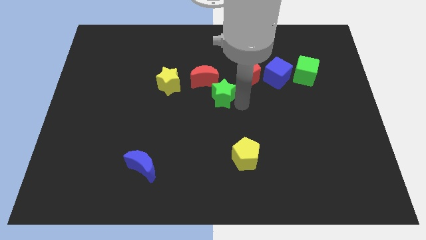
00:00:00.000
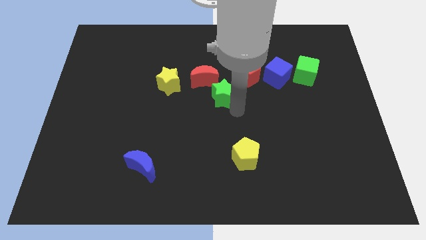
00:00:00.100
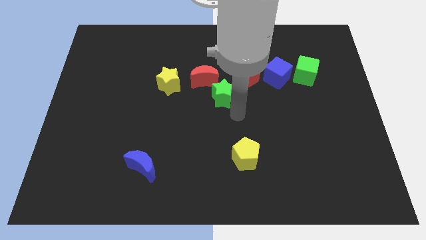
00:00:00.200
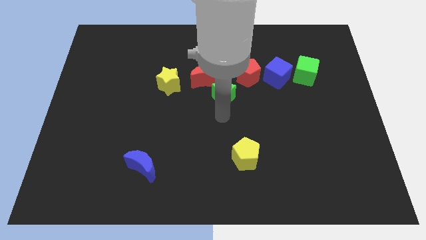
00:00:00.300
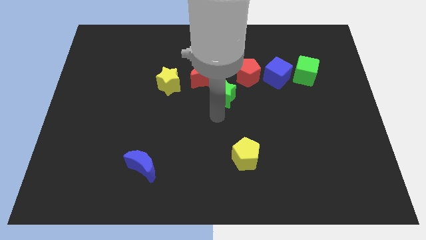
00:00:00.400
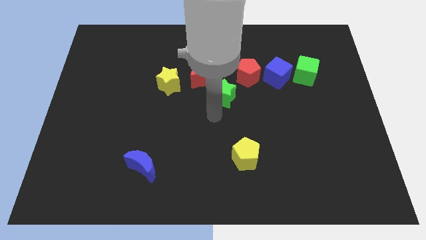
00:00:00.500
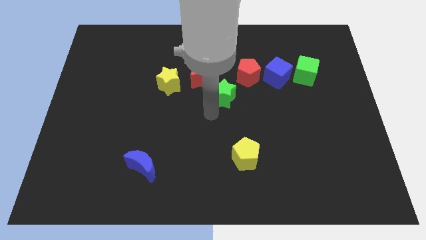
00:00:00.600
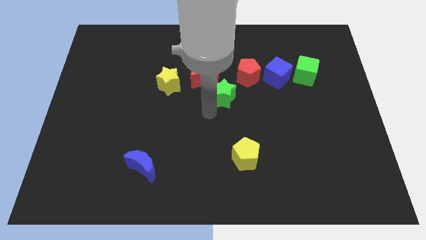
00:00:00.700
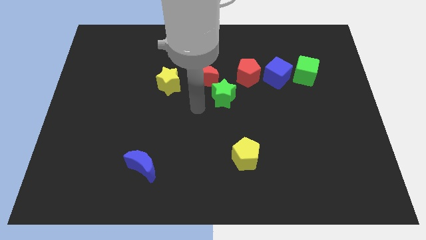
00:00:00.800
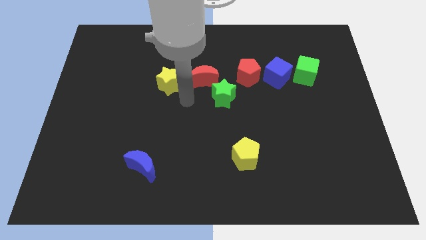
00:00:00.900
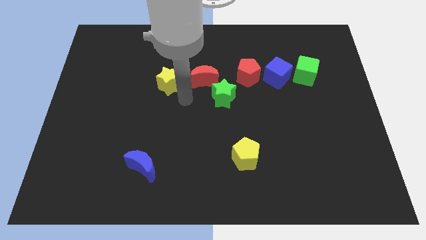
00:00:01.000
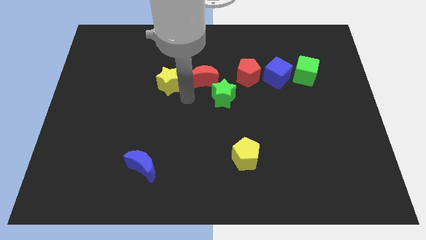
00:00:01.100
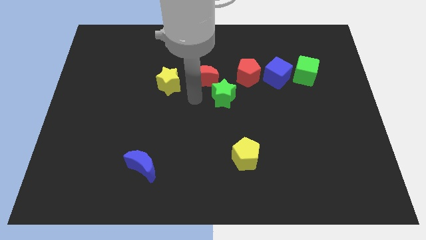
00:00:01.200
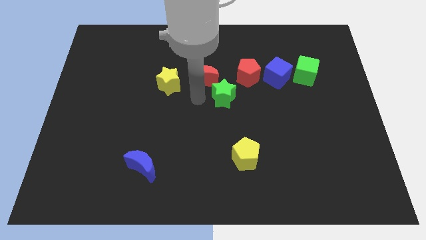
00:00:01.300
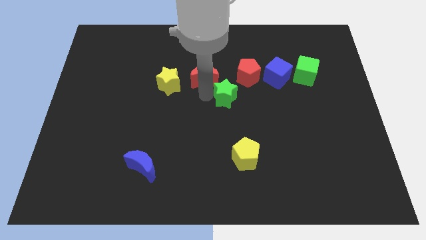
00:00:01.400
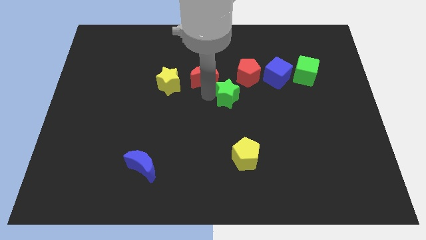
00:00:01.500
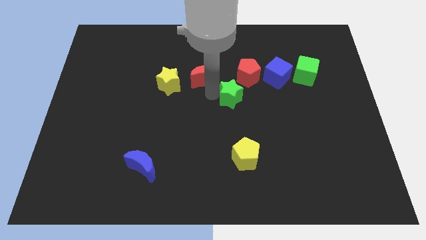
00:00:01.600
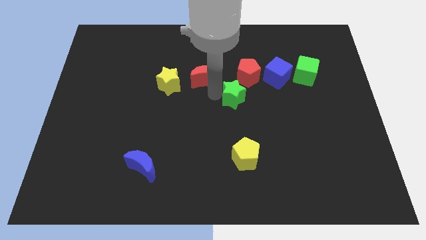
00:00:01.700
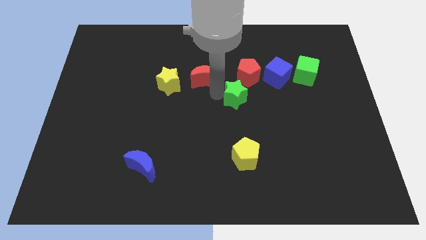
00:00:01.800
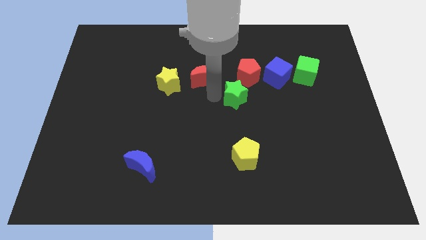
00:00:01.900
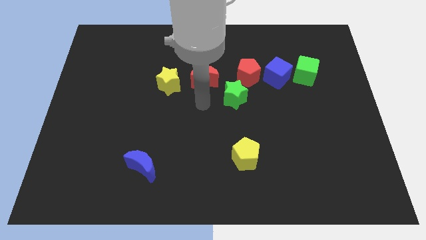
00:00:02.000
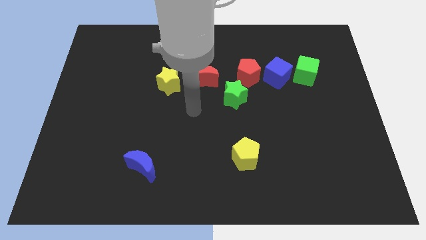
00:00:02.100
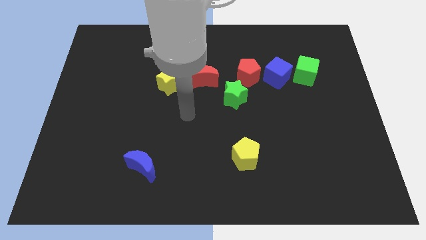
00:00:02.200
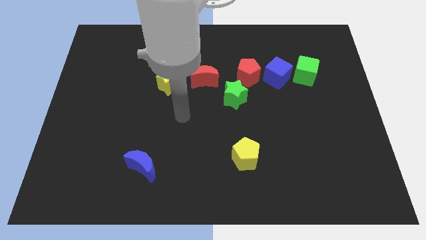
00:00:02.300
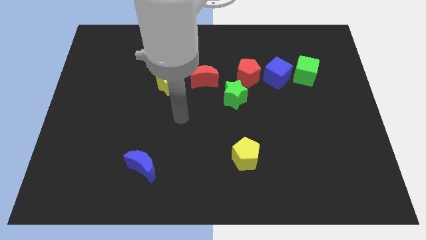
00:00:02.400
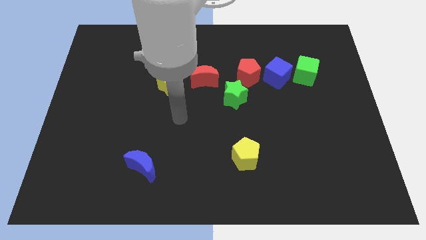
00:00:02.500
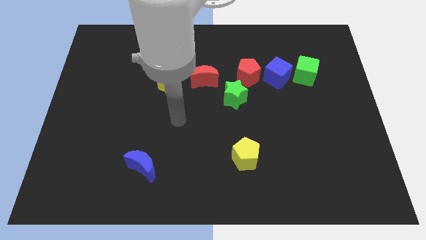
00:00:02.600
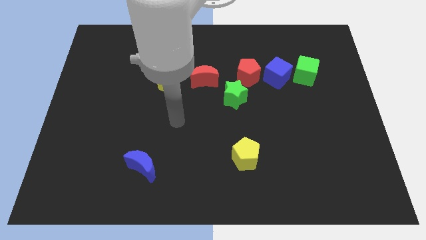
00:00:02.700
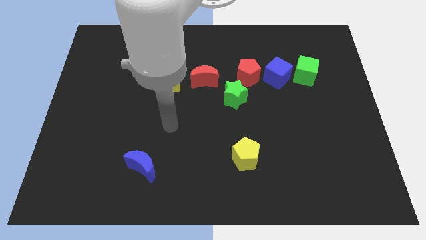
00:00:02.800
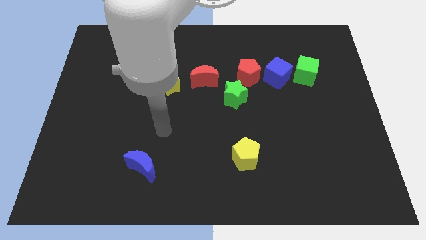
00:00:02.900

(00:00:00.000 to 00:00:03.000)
place the green star bottom left to the red pentagon

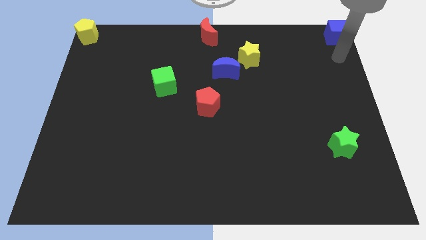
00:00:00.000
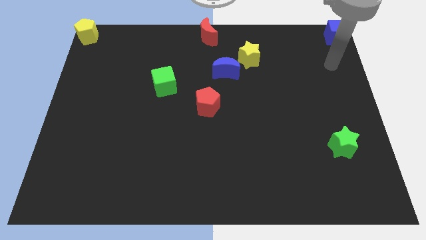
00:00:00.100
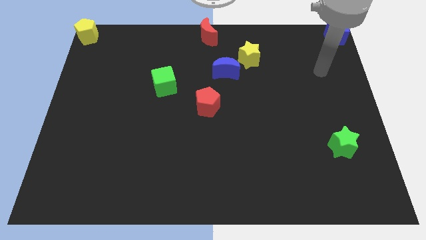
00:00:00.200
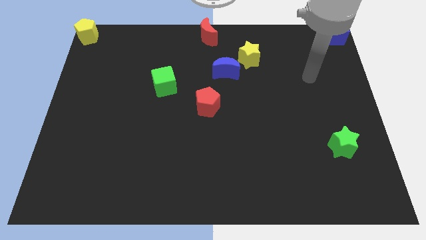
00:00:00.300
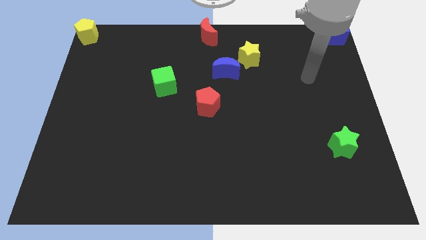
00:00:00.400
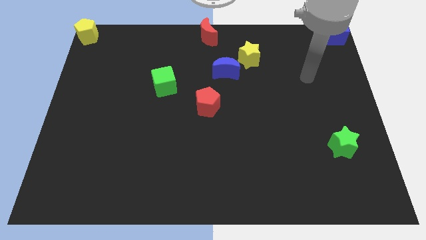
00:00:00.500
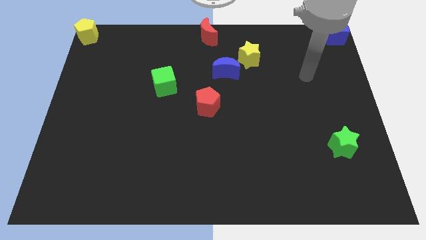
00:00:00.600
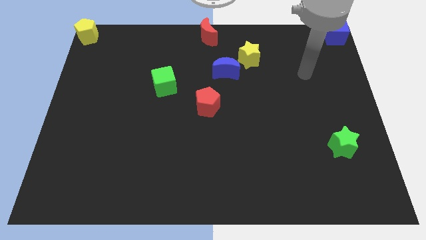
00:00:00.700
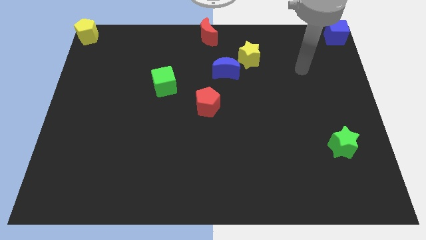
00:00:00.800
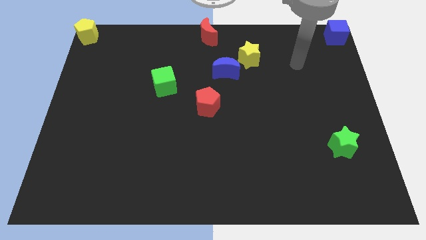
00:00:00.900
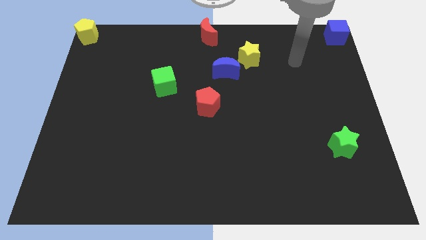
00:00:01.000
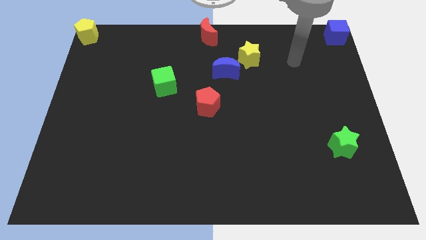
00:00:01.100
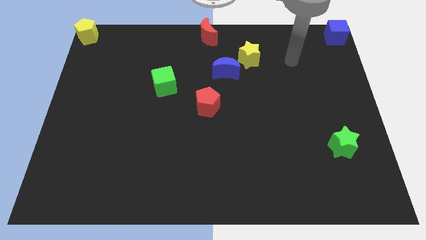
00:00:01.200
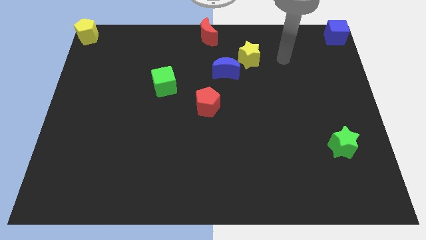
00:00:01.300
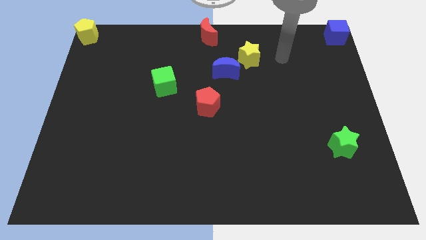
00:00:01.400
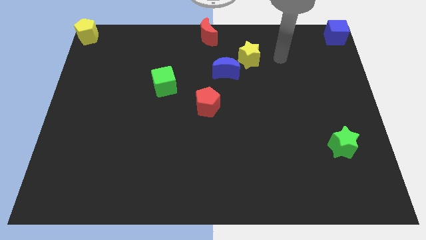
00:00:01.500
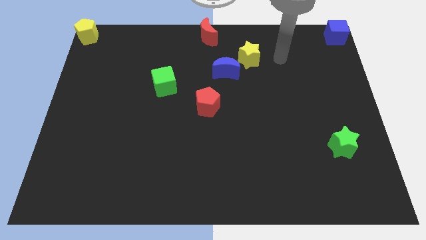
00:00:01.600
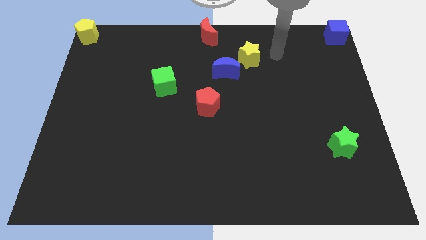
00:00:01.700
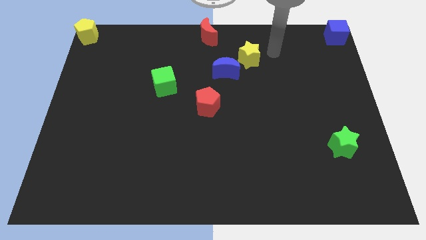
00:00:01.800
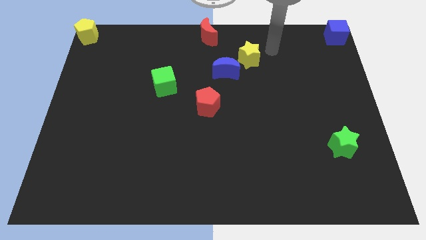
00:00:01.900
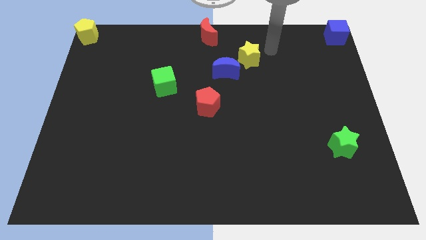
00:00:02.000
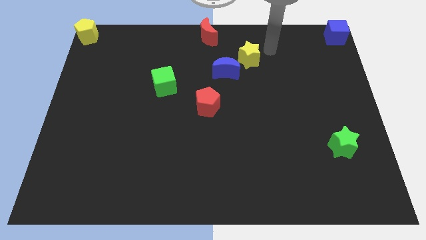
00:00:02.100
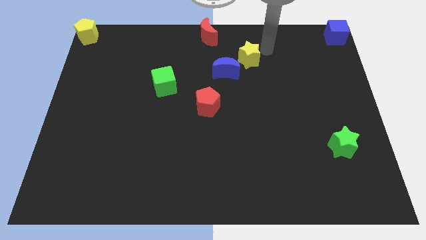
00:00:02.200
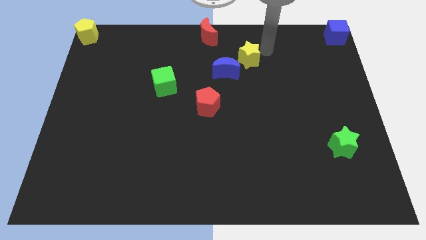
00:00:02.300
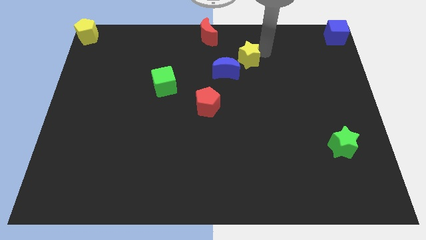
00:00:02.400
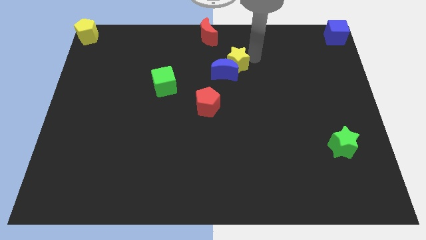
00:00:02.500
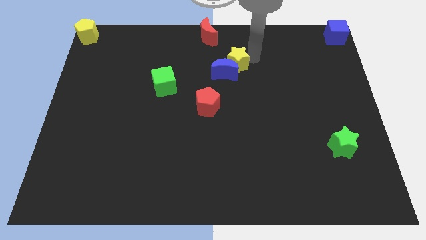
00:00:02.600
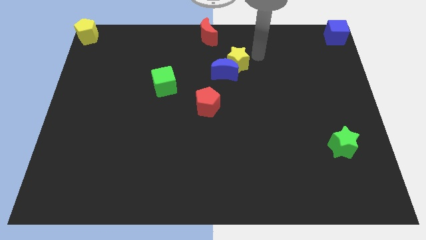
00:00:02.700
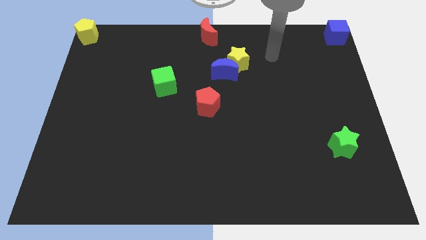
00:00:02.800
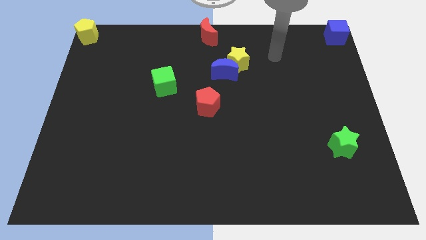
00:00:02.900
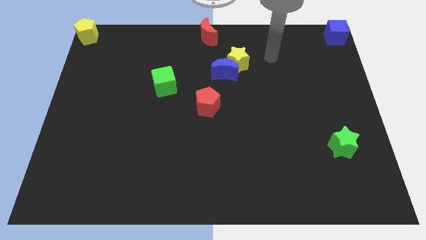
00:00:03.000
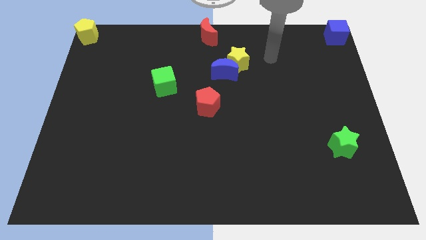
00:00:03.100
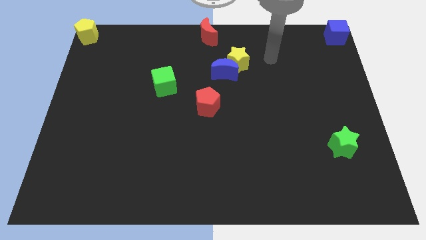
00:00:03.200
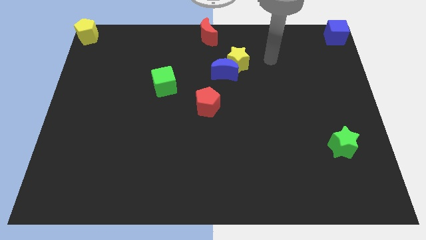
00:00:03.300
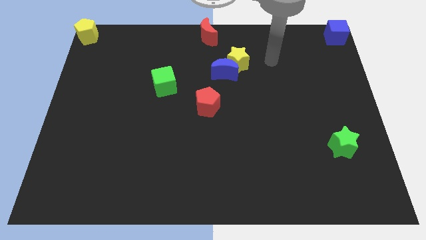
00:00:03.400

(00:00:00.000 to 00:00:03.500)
push the yellow star into blue crescent

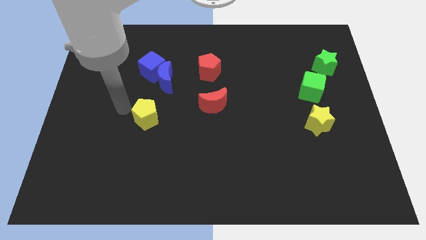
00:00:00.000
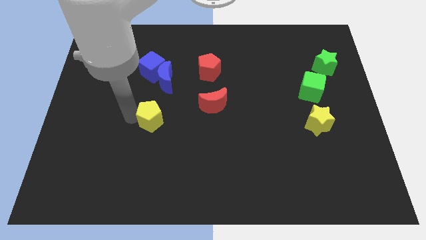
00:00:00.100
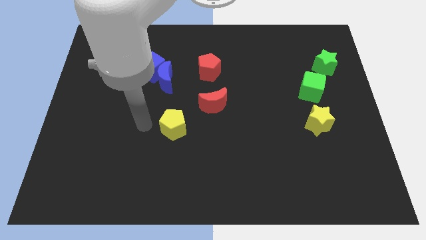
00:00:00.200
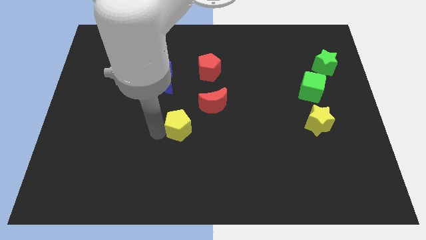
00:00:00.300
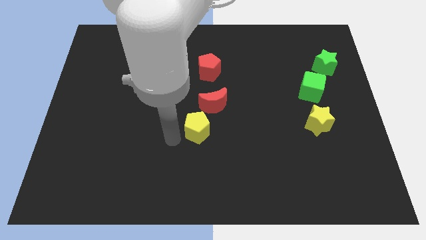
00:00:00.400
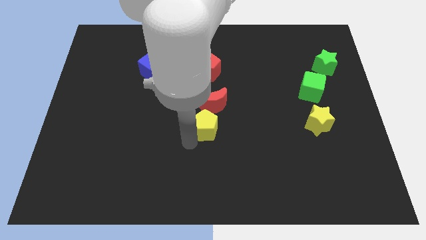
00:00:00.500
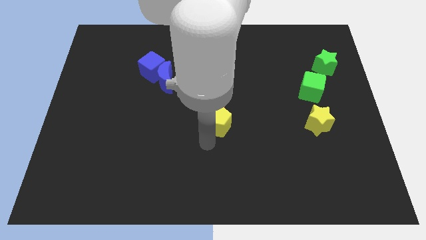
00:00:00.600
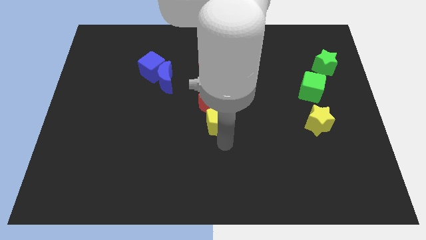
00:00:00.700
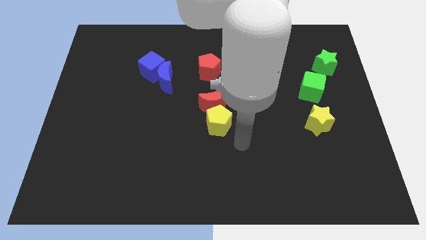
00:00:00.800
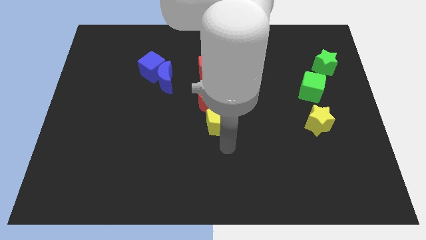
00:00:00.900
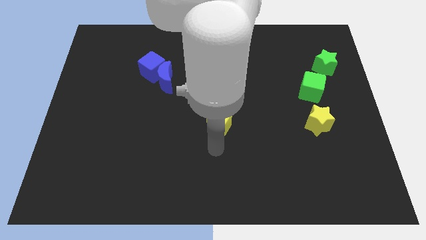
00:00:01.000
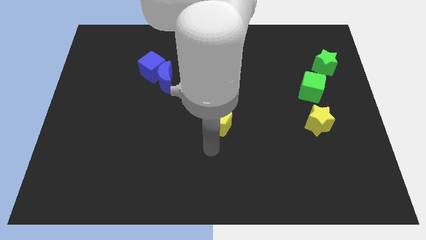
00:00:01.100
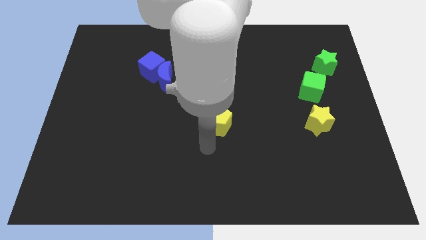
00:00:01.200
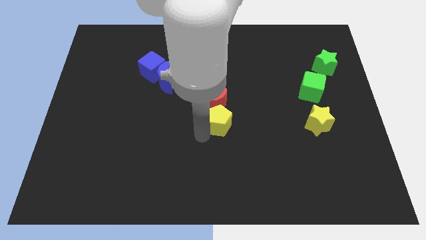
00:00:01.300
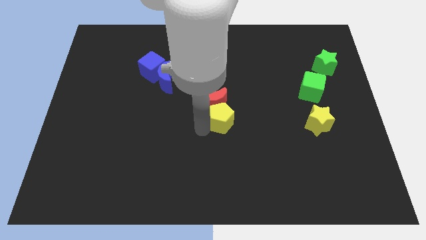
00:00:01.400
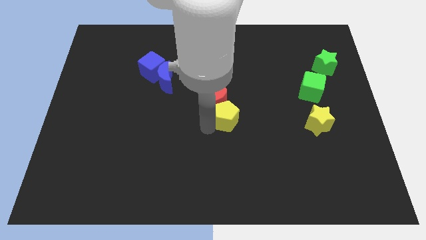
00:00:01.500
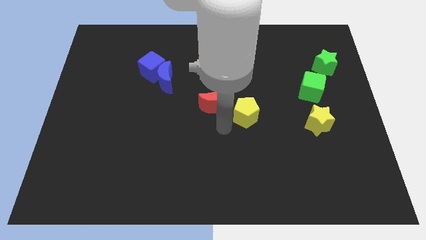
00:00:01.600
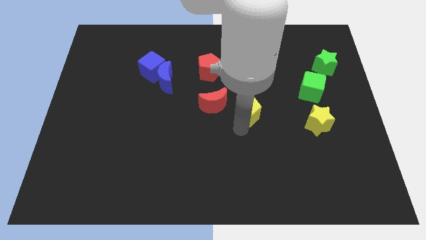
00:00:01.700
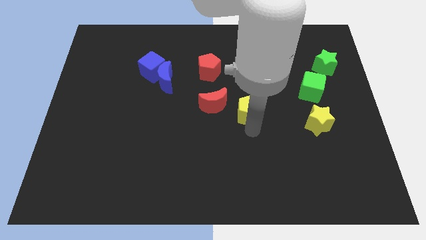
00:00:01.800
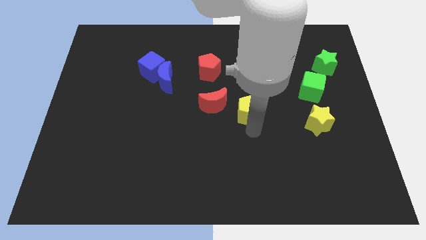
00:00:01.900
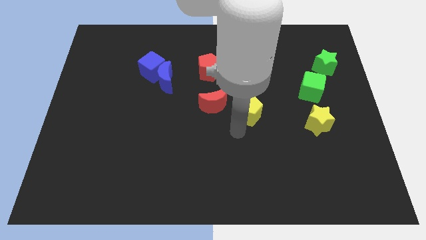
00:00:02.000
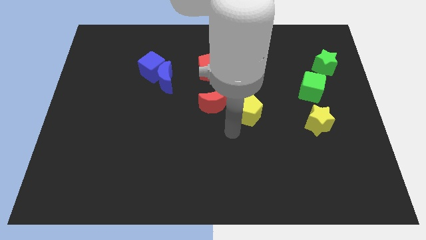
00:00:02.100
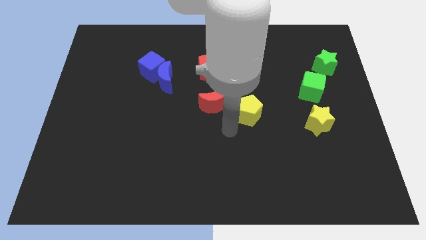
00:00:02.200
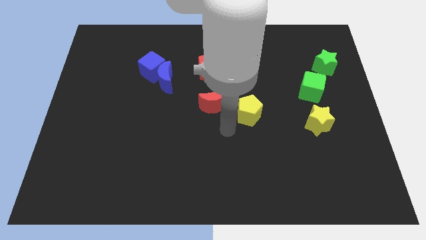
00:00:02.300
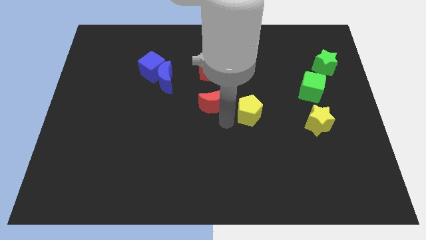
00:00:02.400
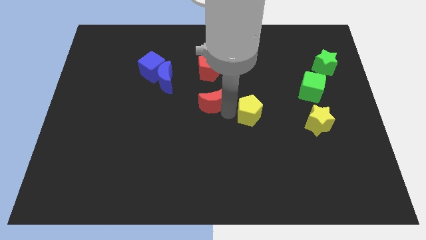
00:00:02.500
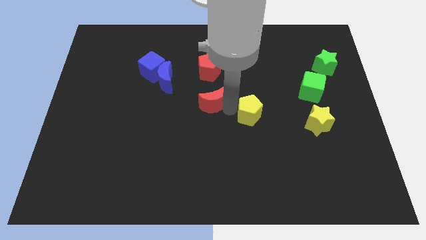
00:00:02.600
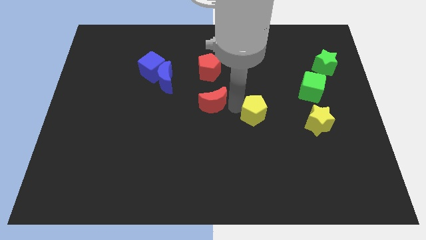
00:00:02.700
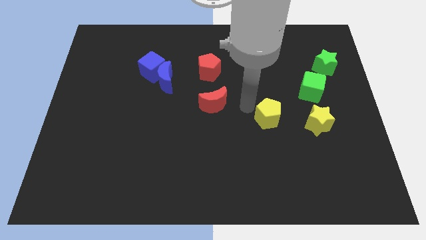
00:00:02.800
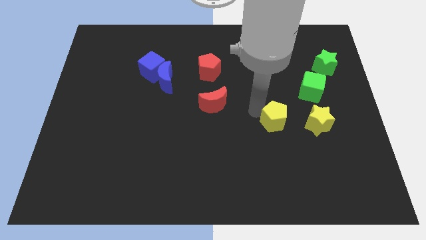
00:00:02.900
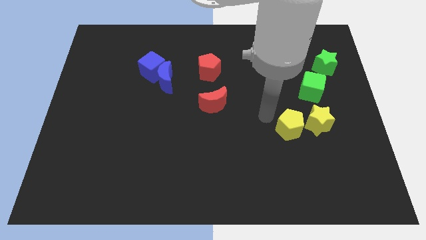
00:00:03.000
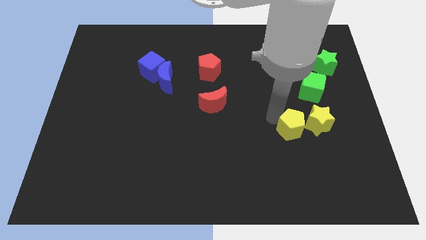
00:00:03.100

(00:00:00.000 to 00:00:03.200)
push yellow pentagon into yellow star
